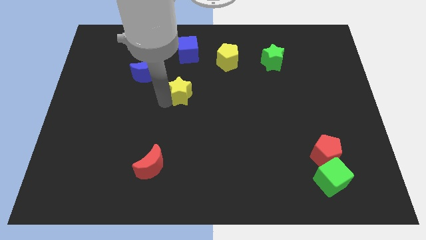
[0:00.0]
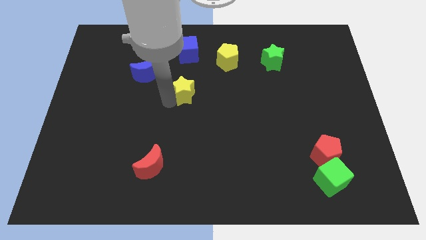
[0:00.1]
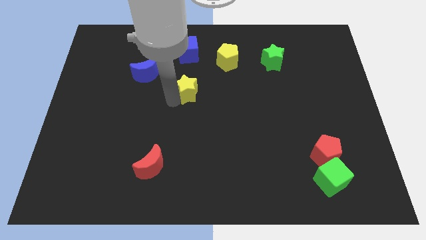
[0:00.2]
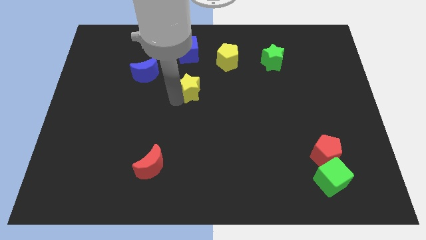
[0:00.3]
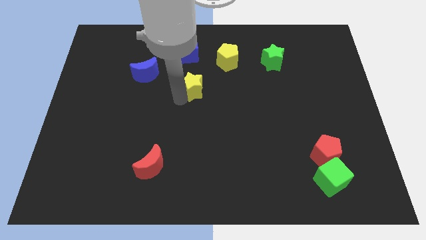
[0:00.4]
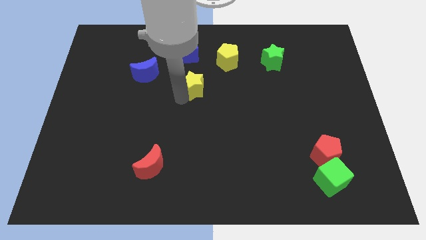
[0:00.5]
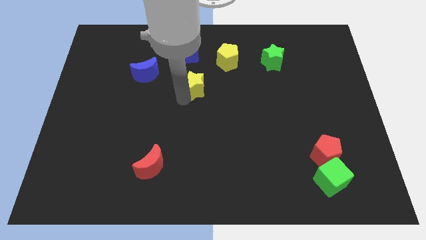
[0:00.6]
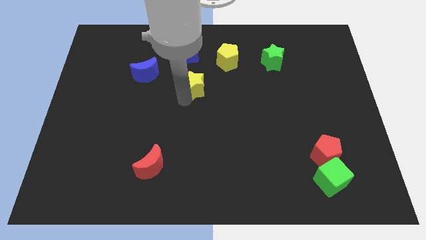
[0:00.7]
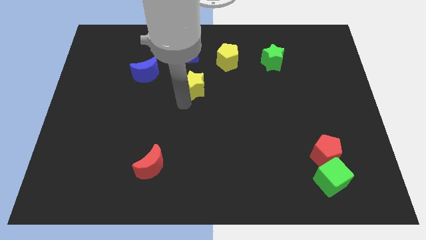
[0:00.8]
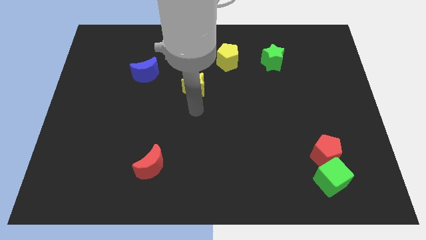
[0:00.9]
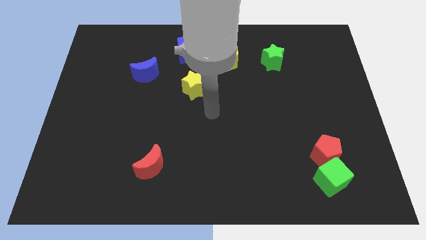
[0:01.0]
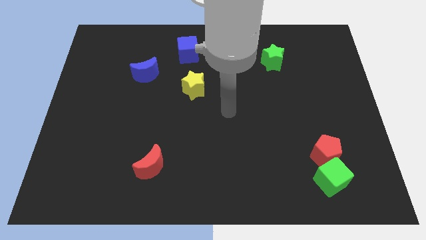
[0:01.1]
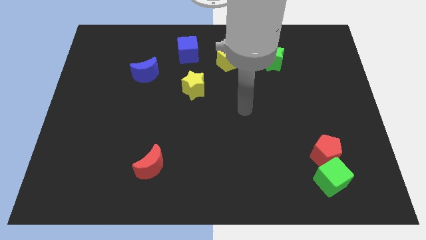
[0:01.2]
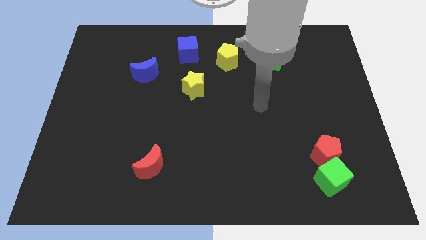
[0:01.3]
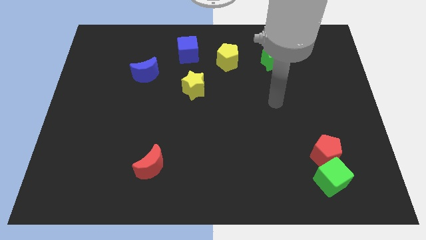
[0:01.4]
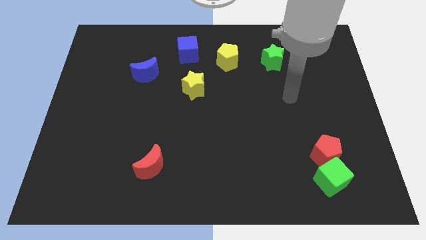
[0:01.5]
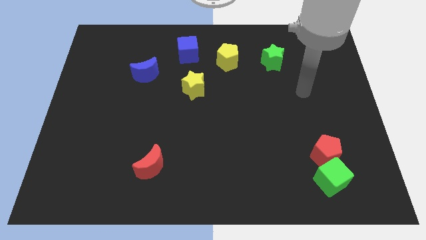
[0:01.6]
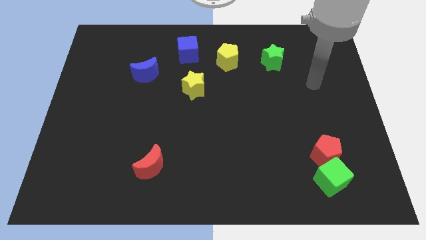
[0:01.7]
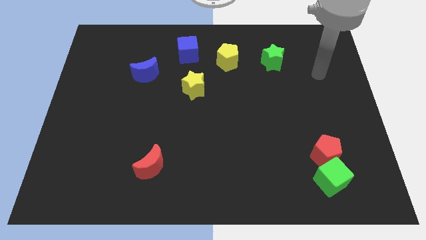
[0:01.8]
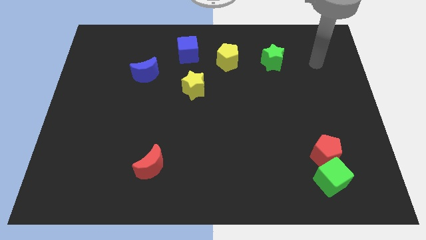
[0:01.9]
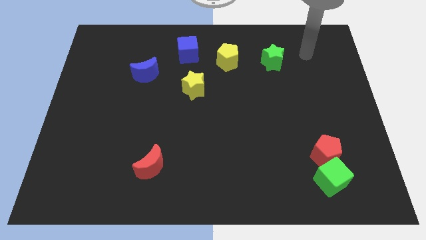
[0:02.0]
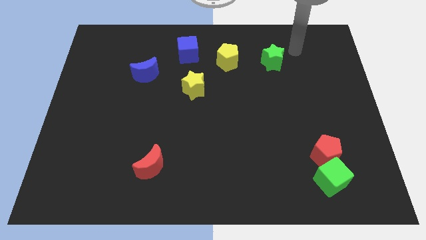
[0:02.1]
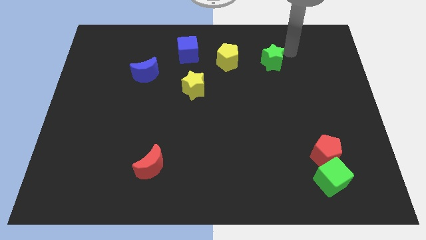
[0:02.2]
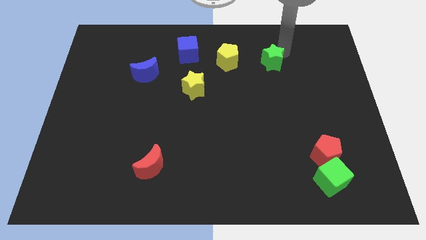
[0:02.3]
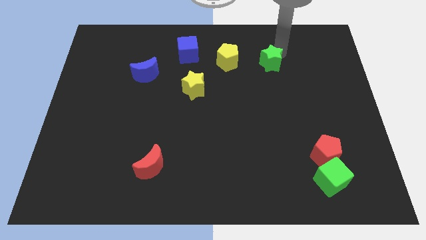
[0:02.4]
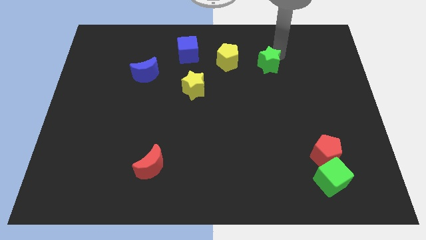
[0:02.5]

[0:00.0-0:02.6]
push the yellow star to the center of the board

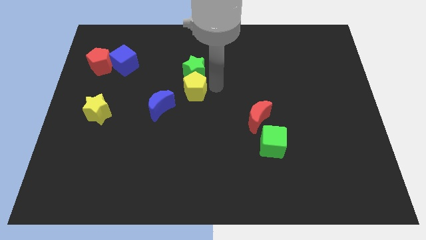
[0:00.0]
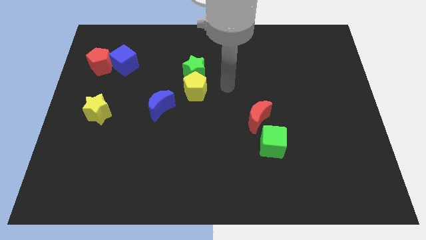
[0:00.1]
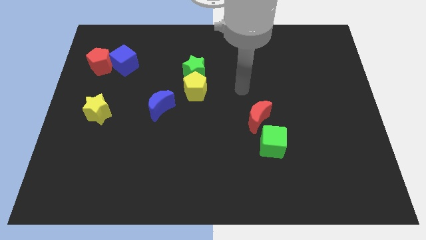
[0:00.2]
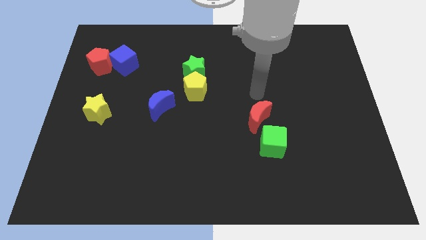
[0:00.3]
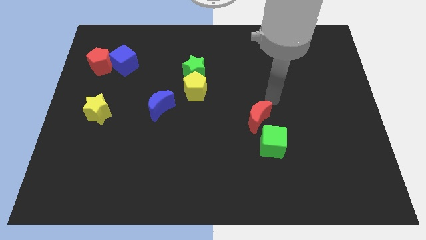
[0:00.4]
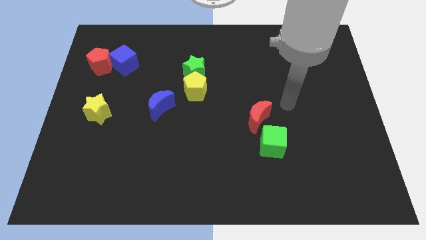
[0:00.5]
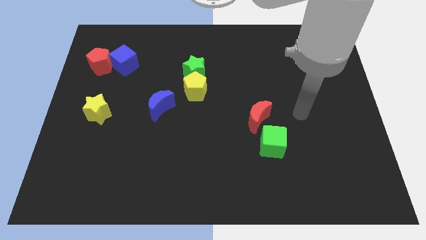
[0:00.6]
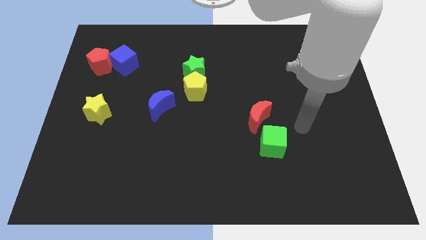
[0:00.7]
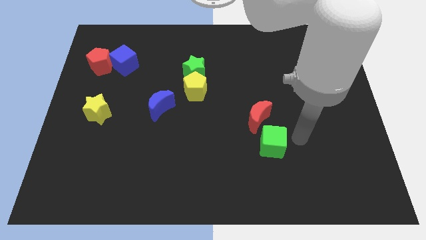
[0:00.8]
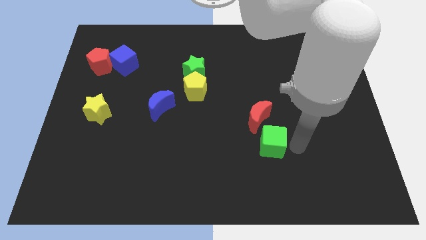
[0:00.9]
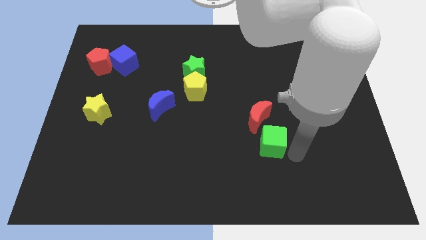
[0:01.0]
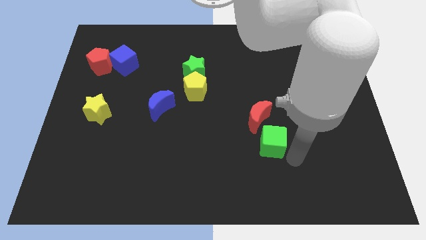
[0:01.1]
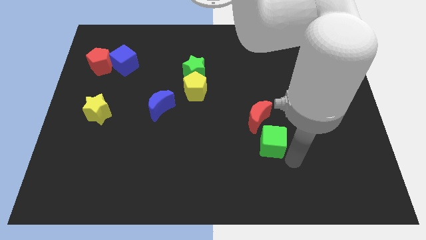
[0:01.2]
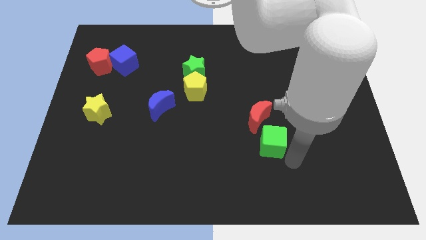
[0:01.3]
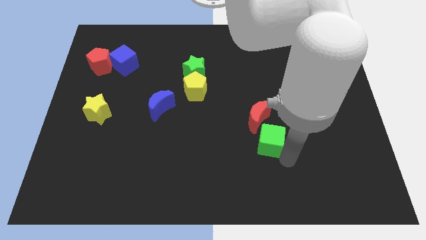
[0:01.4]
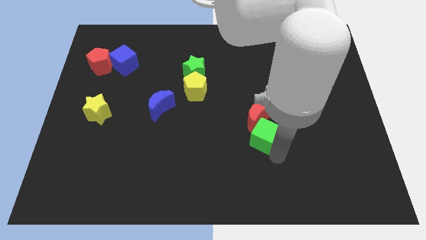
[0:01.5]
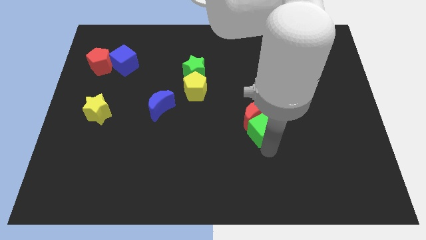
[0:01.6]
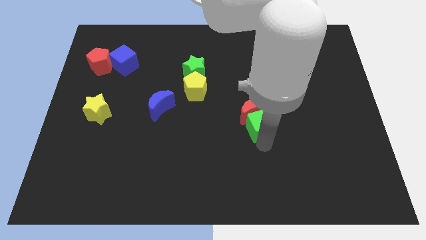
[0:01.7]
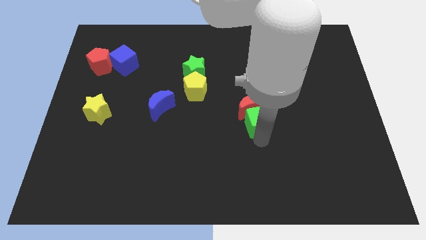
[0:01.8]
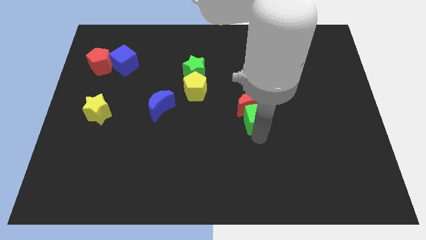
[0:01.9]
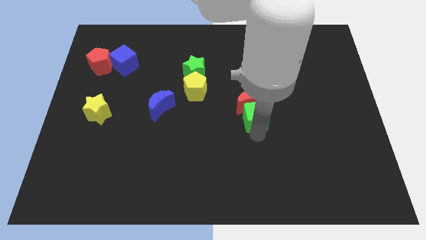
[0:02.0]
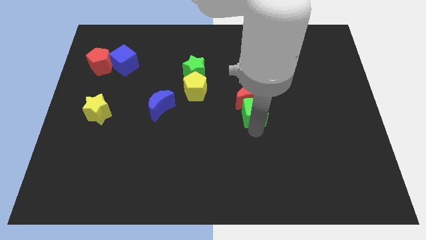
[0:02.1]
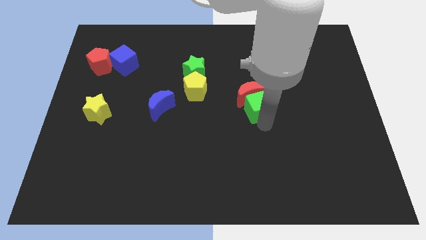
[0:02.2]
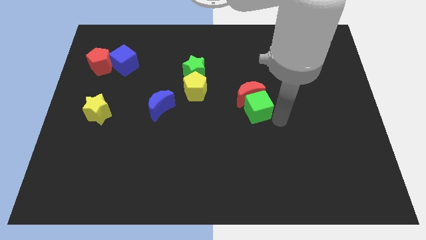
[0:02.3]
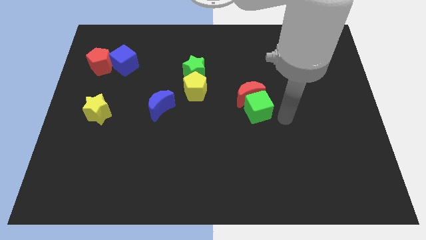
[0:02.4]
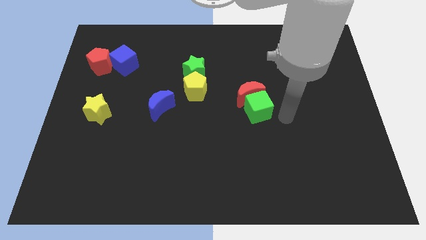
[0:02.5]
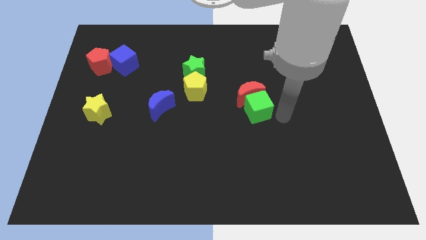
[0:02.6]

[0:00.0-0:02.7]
move the green cube along with red crescent towards the right of the yellow pentagon

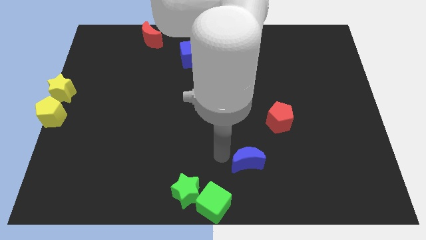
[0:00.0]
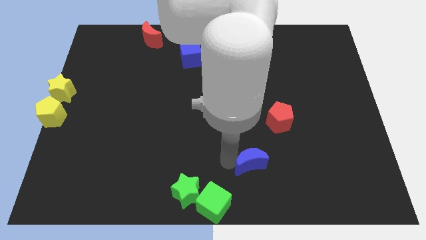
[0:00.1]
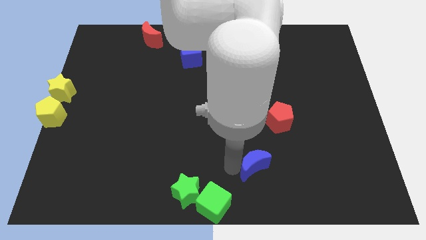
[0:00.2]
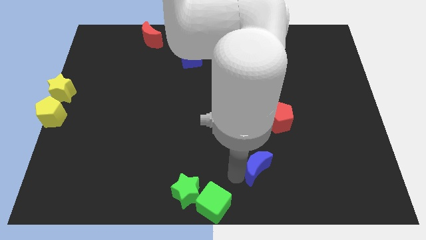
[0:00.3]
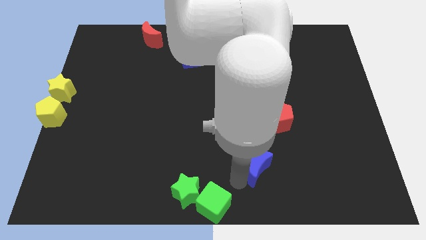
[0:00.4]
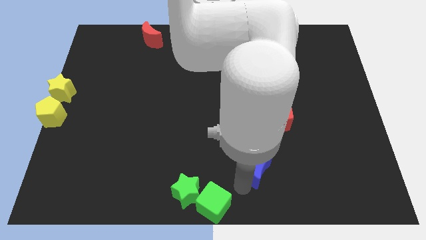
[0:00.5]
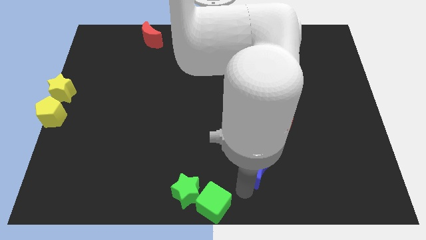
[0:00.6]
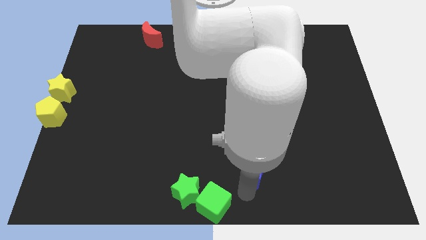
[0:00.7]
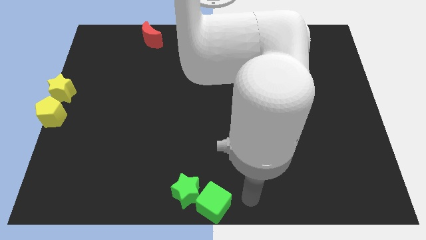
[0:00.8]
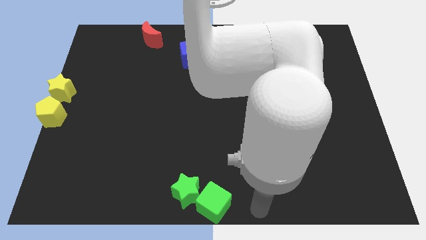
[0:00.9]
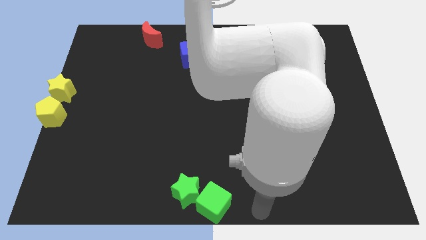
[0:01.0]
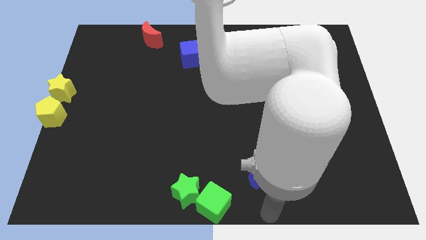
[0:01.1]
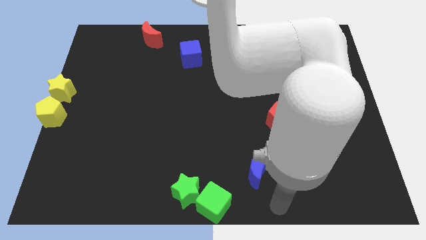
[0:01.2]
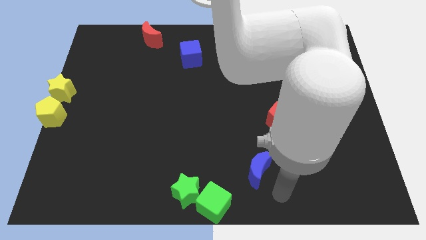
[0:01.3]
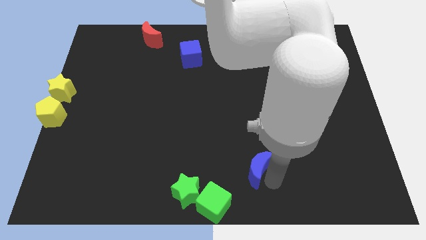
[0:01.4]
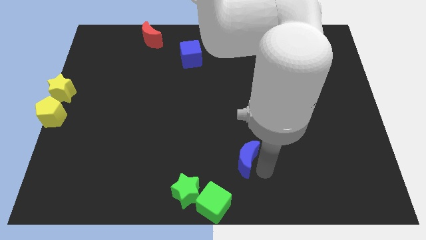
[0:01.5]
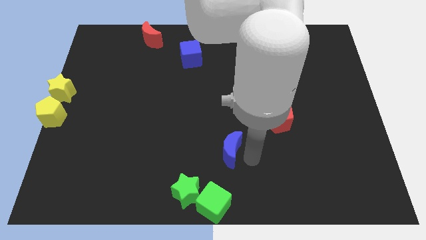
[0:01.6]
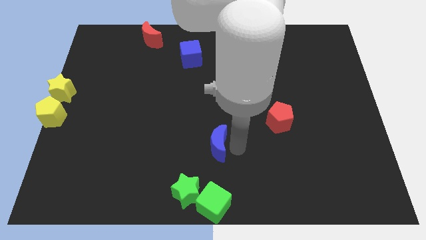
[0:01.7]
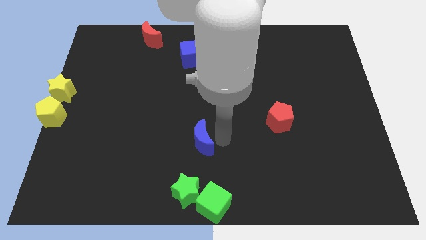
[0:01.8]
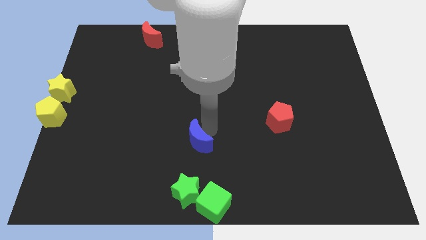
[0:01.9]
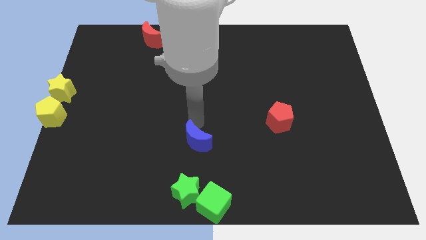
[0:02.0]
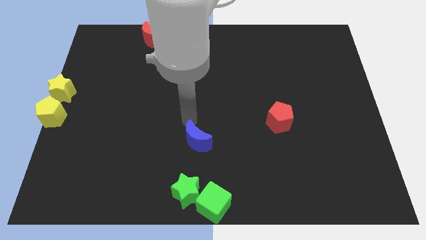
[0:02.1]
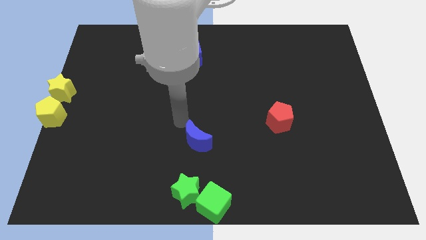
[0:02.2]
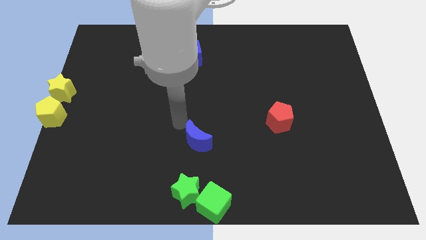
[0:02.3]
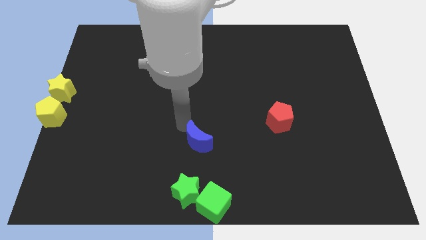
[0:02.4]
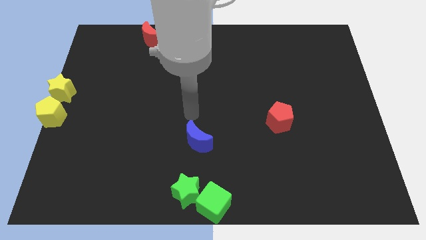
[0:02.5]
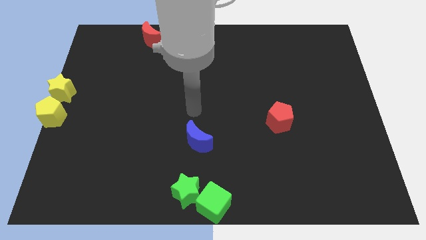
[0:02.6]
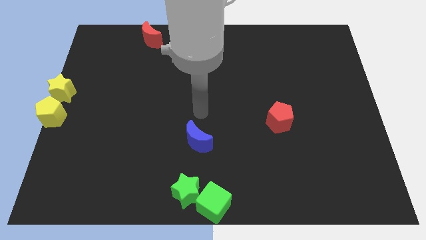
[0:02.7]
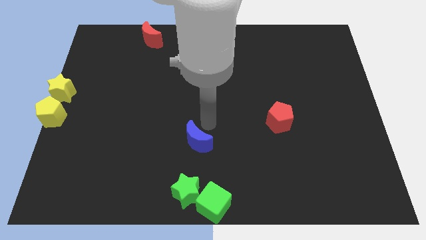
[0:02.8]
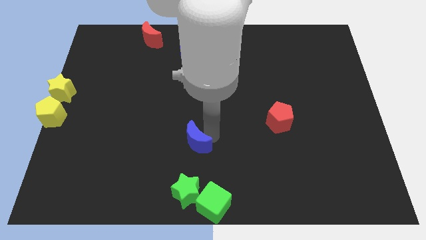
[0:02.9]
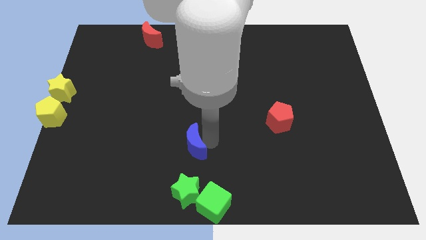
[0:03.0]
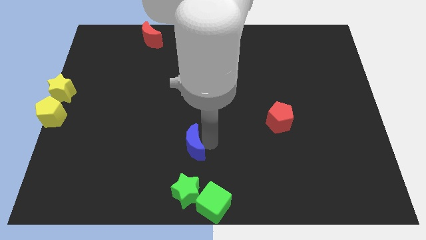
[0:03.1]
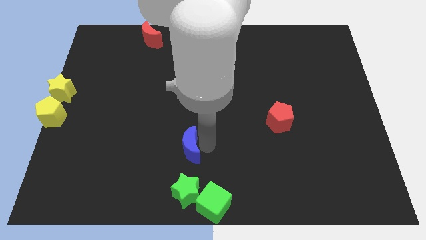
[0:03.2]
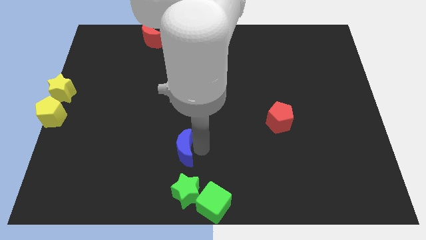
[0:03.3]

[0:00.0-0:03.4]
place the blue moon vertically above the green star

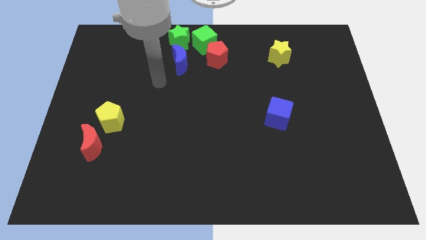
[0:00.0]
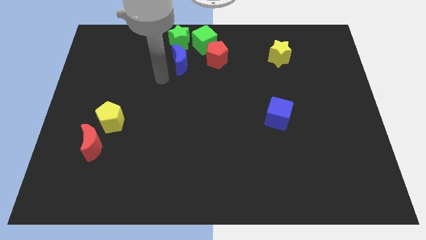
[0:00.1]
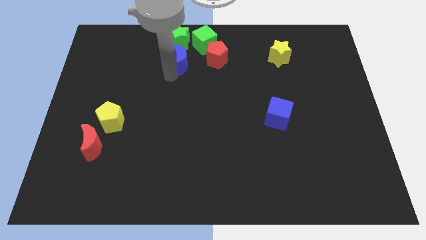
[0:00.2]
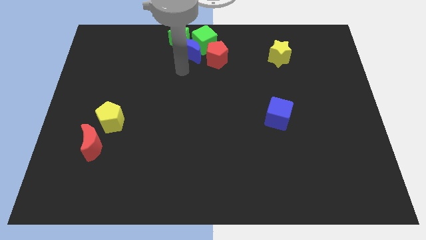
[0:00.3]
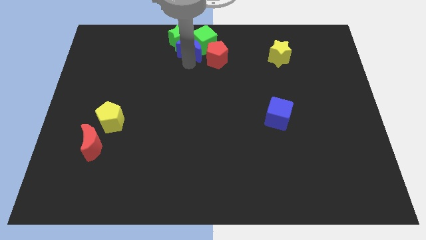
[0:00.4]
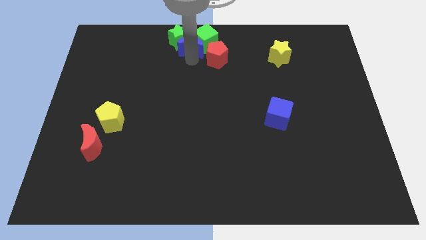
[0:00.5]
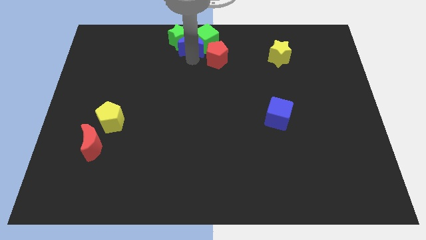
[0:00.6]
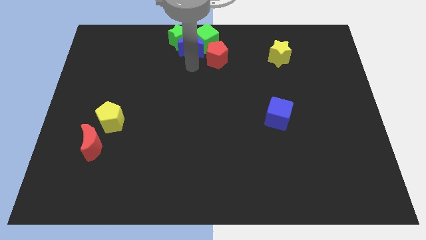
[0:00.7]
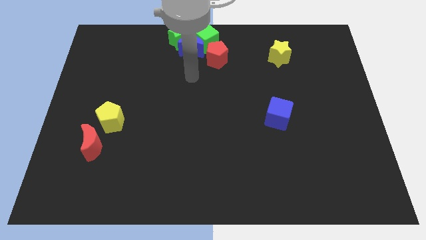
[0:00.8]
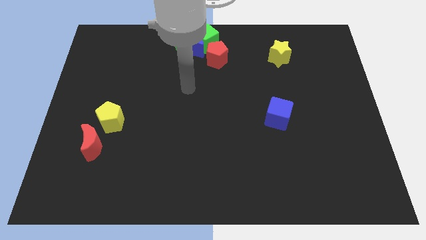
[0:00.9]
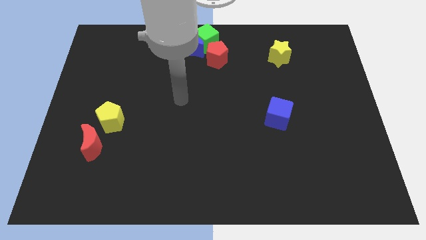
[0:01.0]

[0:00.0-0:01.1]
push the blue moon into the group of green star and green cube
